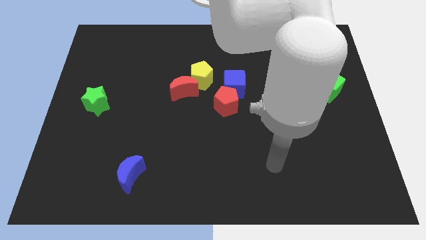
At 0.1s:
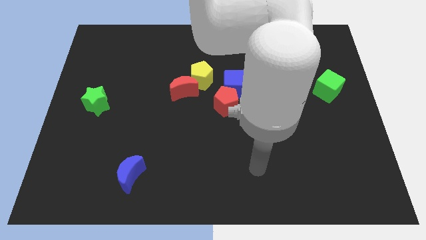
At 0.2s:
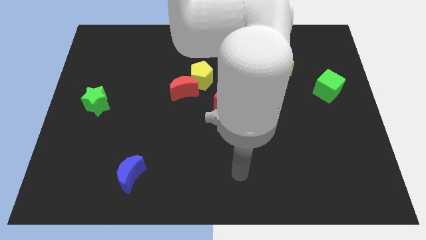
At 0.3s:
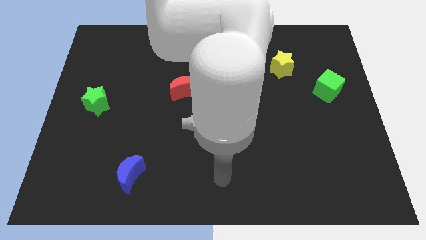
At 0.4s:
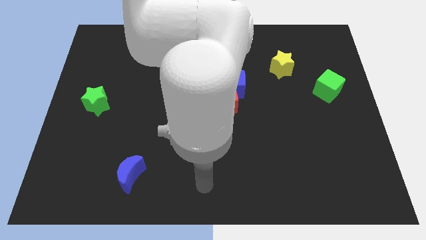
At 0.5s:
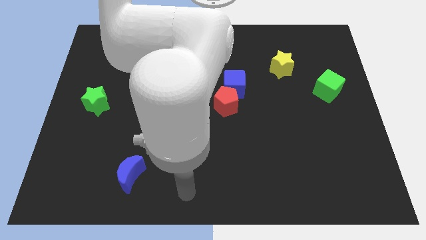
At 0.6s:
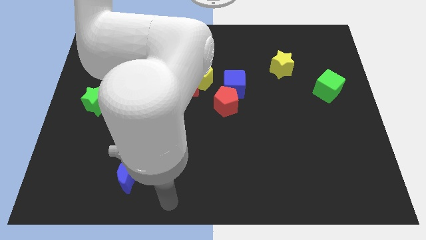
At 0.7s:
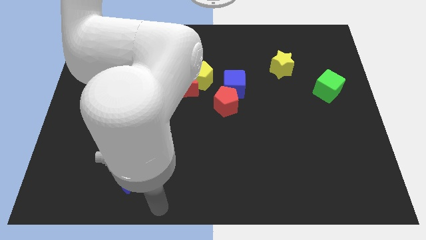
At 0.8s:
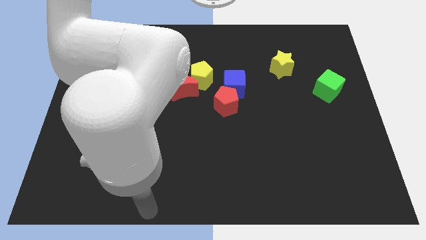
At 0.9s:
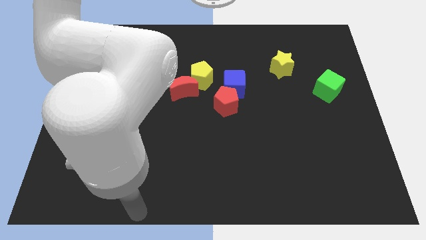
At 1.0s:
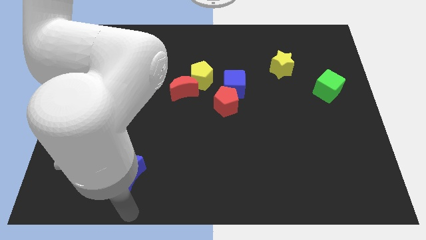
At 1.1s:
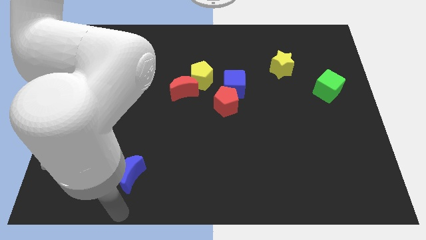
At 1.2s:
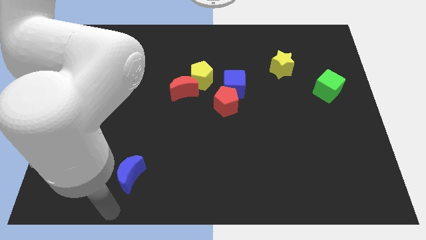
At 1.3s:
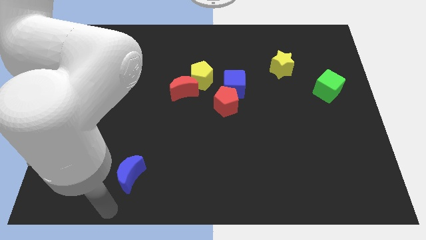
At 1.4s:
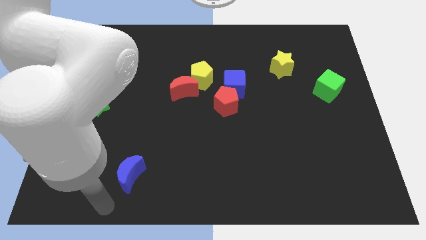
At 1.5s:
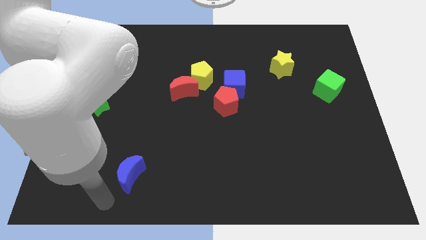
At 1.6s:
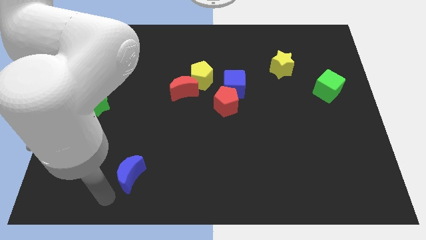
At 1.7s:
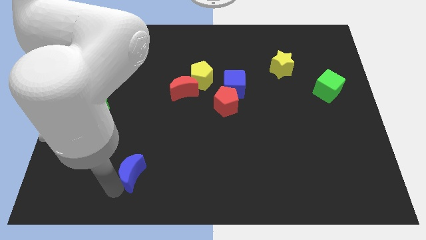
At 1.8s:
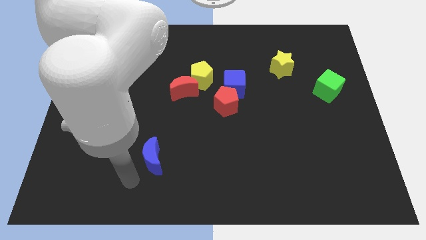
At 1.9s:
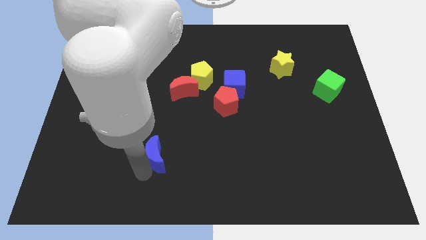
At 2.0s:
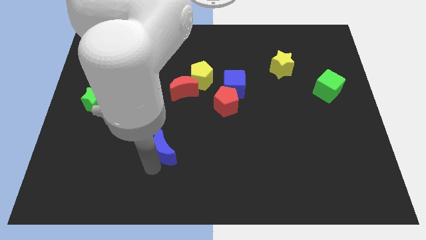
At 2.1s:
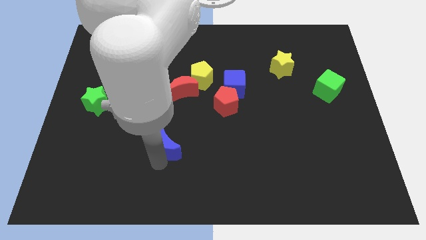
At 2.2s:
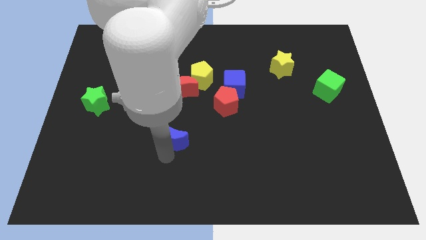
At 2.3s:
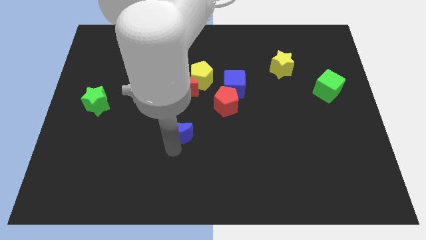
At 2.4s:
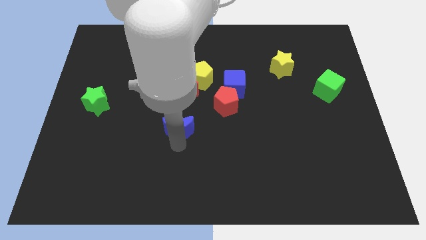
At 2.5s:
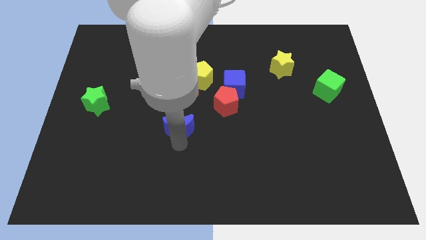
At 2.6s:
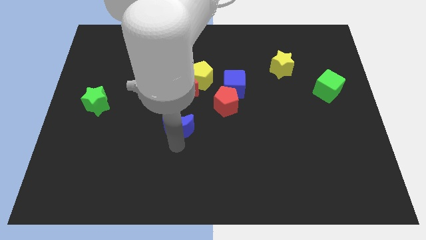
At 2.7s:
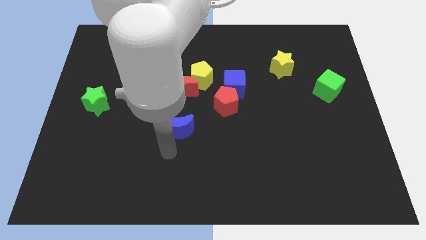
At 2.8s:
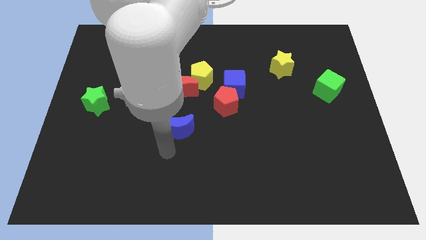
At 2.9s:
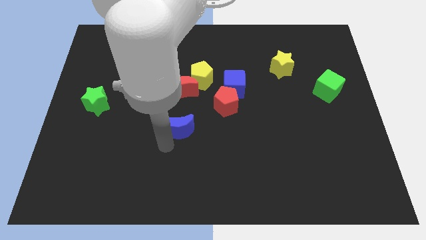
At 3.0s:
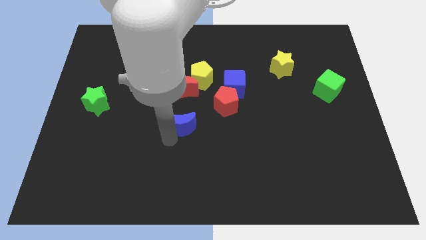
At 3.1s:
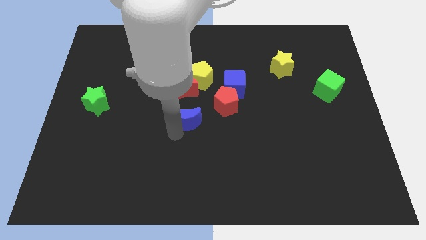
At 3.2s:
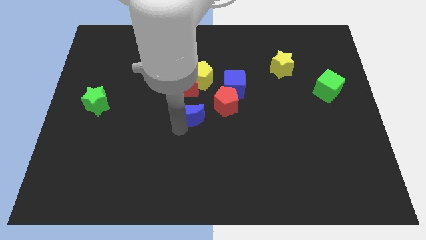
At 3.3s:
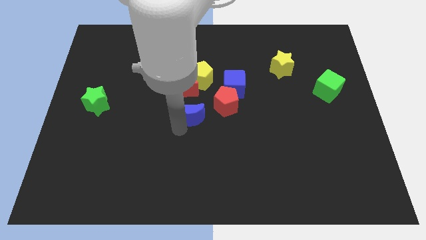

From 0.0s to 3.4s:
push the blue moon vertically below the red moon

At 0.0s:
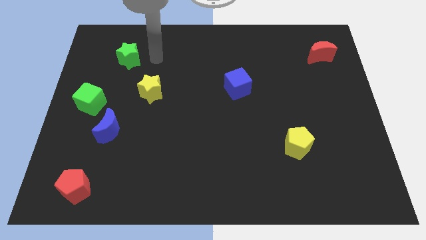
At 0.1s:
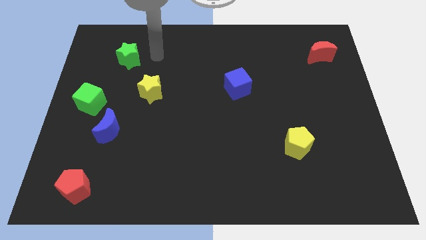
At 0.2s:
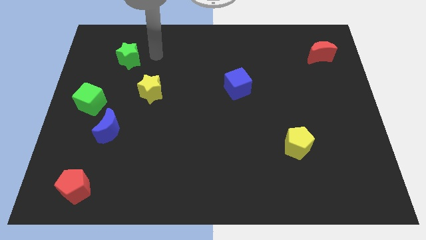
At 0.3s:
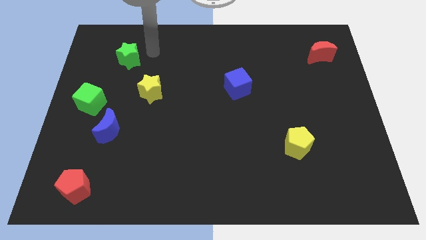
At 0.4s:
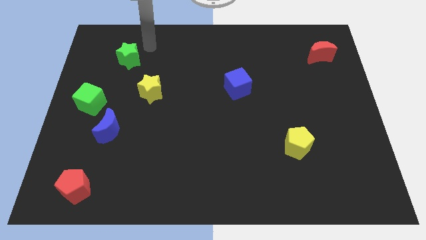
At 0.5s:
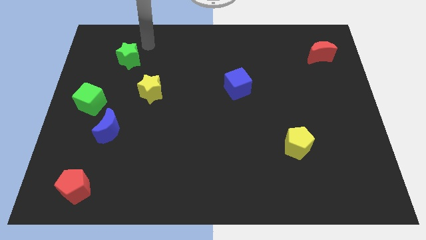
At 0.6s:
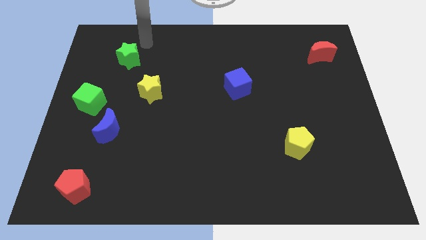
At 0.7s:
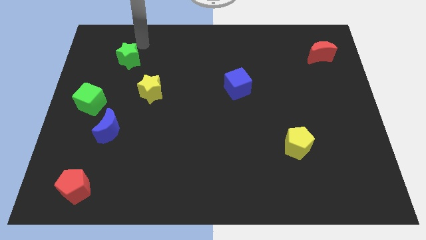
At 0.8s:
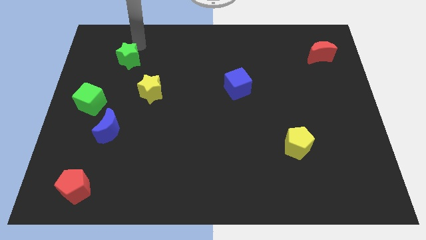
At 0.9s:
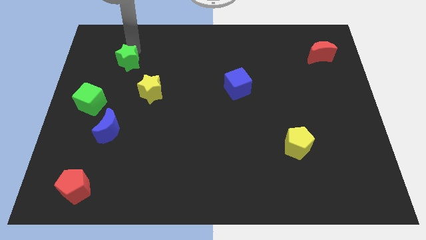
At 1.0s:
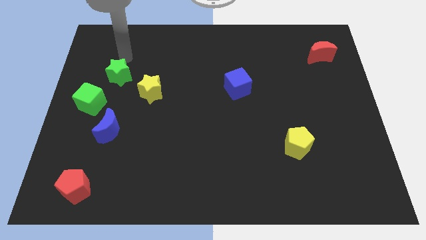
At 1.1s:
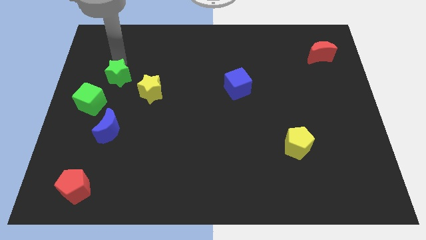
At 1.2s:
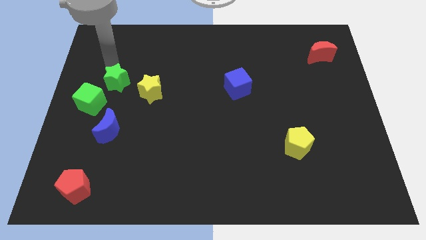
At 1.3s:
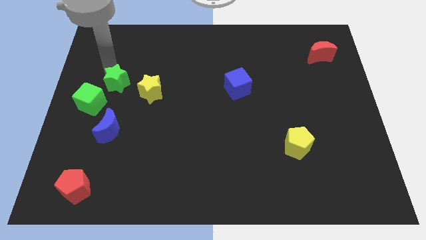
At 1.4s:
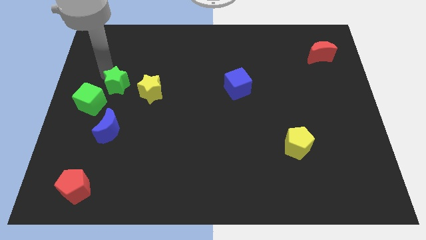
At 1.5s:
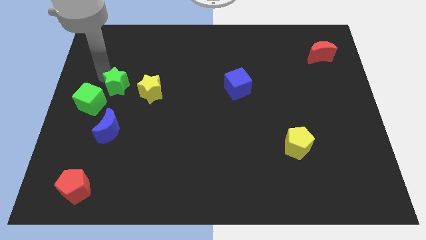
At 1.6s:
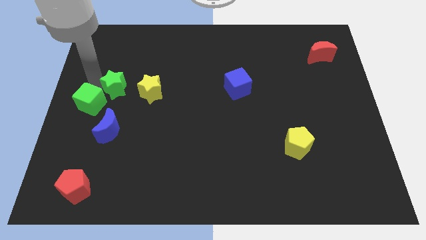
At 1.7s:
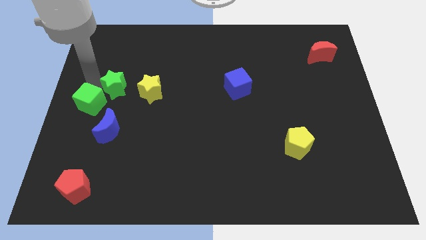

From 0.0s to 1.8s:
push the green star parallel left to the yellow star

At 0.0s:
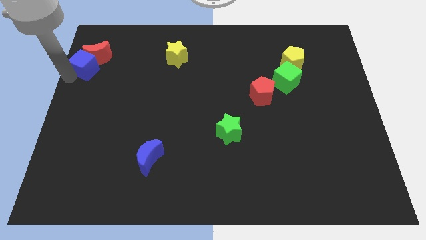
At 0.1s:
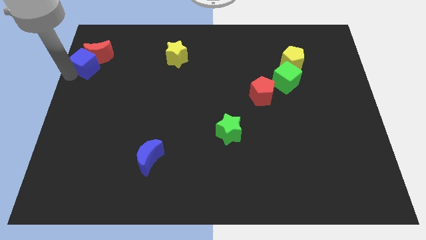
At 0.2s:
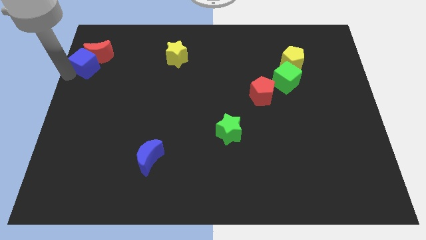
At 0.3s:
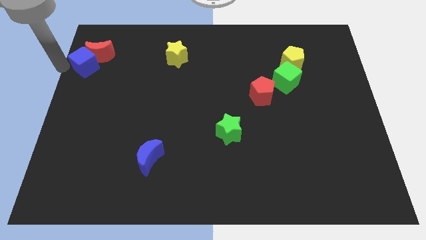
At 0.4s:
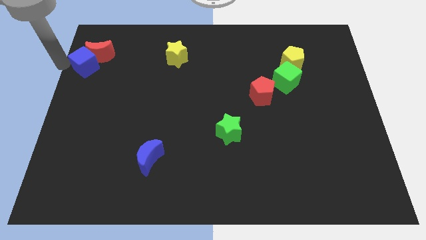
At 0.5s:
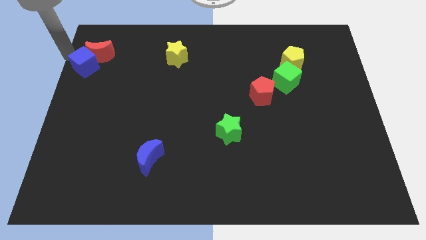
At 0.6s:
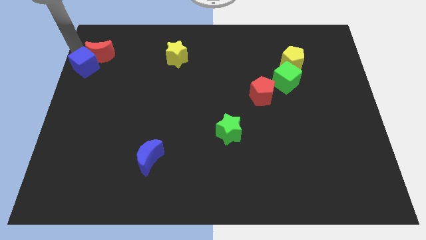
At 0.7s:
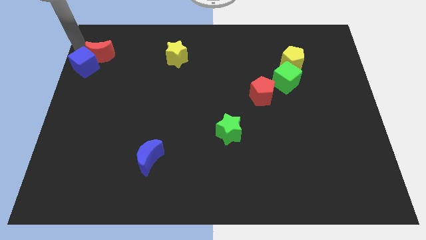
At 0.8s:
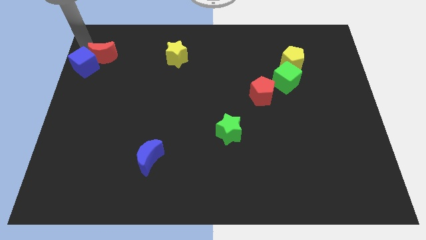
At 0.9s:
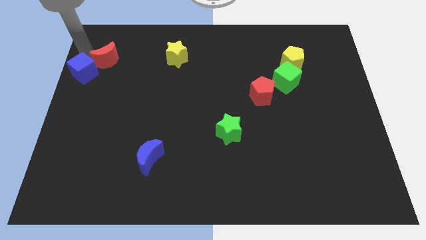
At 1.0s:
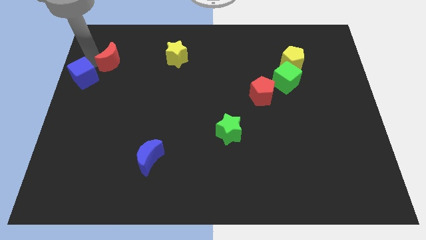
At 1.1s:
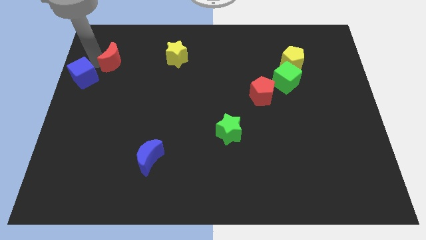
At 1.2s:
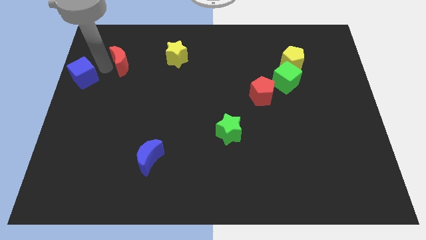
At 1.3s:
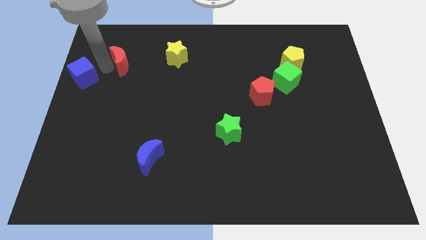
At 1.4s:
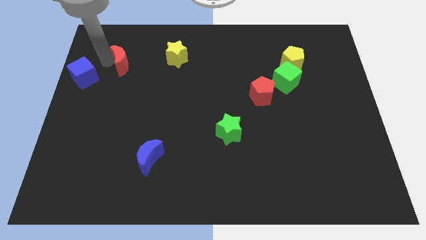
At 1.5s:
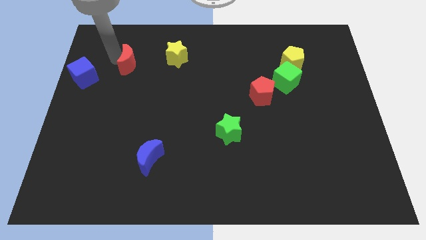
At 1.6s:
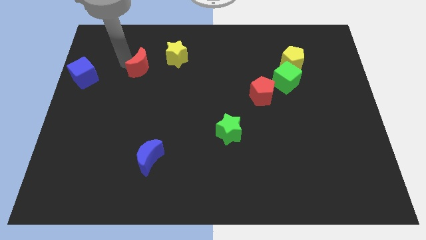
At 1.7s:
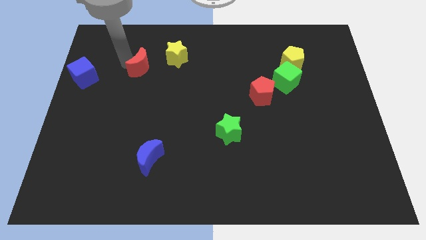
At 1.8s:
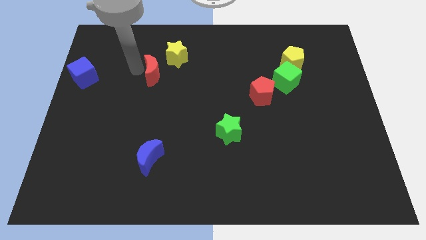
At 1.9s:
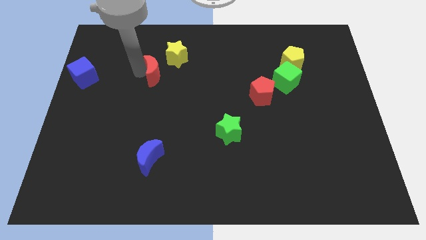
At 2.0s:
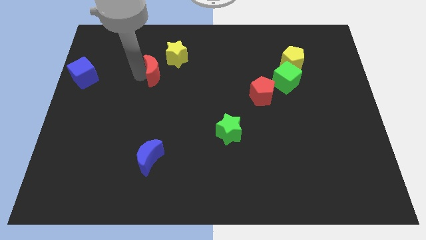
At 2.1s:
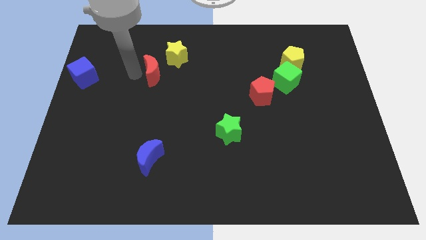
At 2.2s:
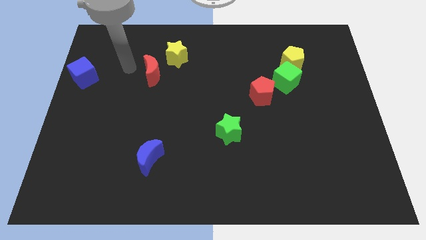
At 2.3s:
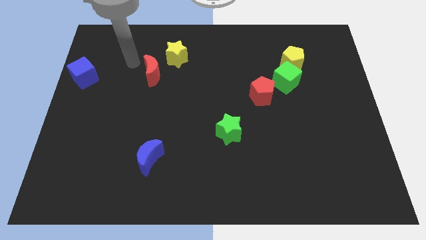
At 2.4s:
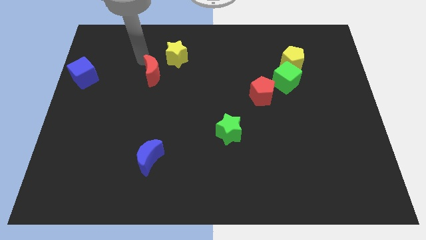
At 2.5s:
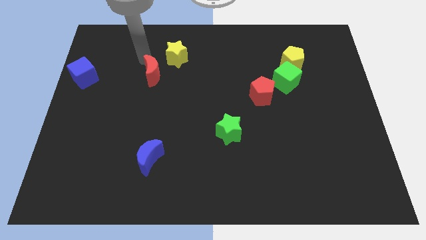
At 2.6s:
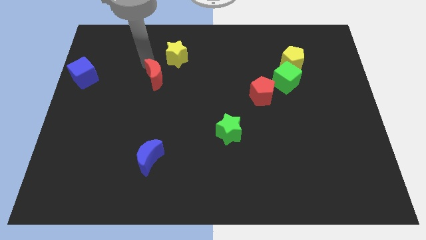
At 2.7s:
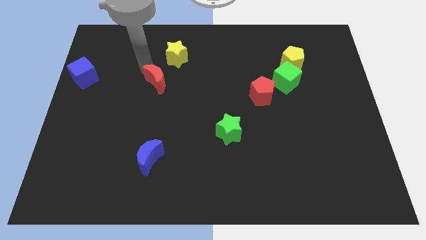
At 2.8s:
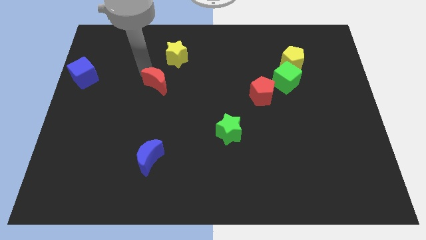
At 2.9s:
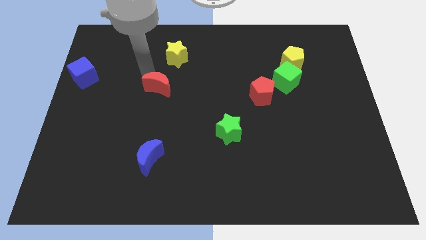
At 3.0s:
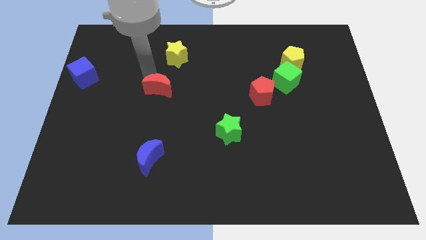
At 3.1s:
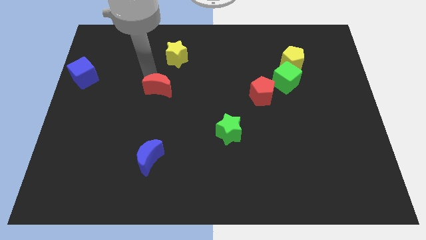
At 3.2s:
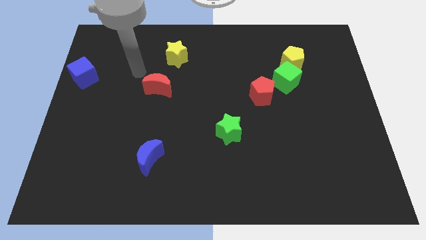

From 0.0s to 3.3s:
push the red moon to the bottom side of the yellow star

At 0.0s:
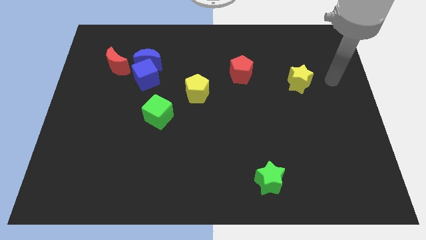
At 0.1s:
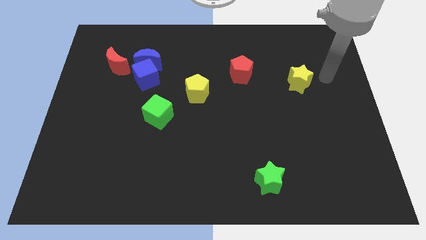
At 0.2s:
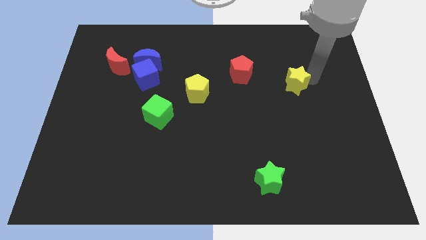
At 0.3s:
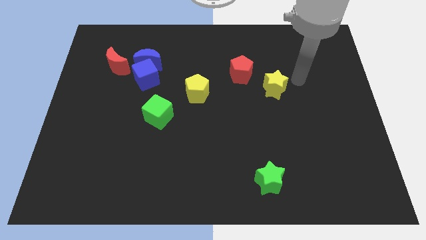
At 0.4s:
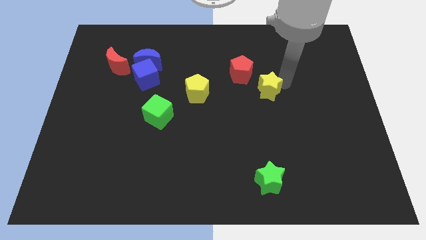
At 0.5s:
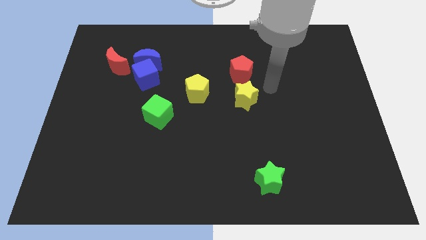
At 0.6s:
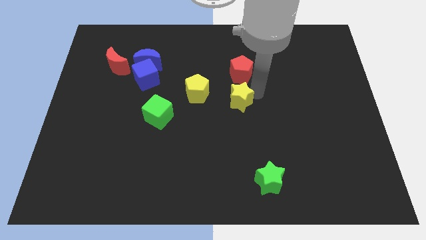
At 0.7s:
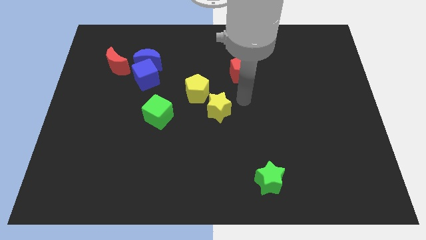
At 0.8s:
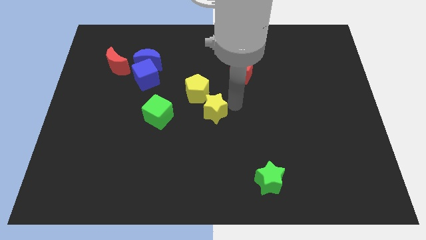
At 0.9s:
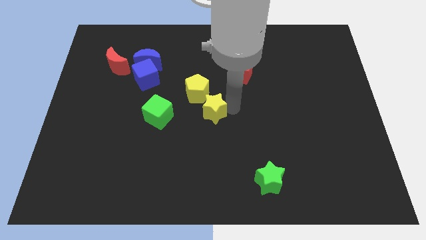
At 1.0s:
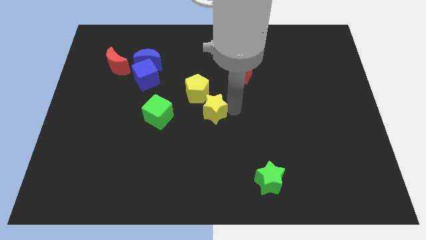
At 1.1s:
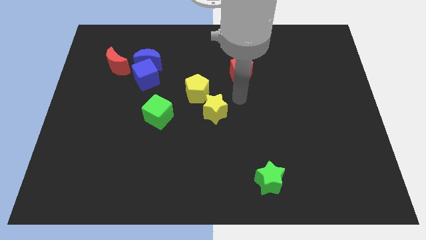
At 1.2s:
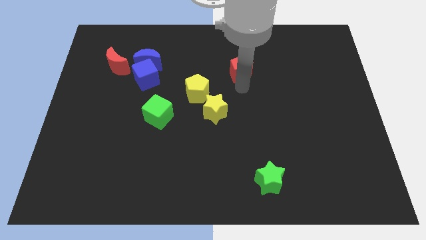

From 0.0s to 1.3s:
place the yellow star to the bottom right of the yellow pentagon
